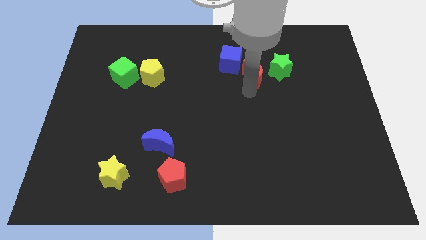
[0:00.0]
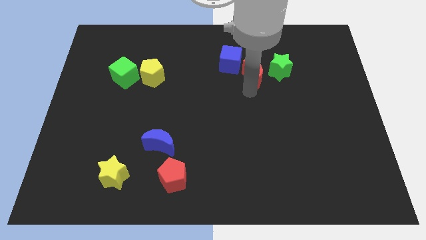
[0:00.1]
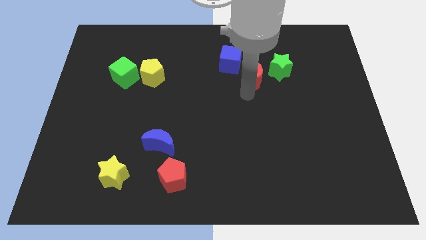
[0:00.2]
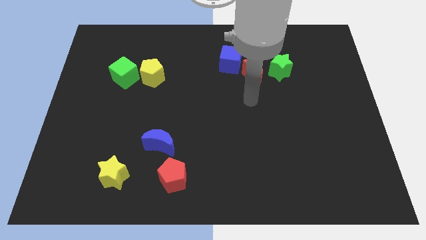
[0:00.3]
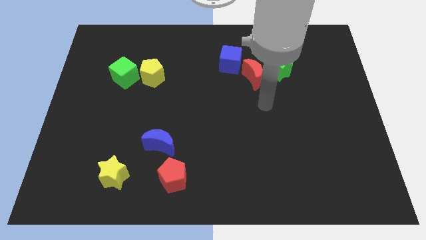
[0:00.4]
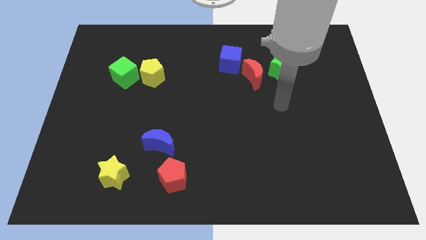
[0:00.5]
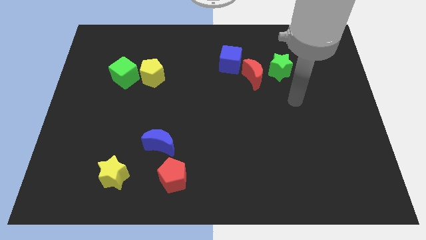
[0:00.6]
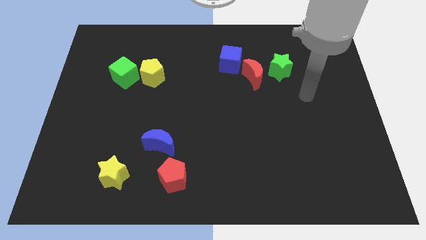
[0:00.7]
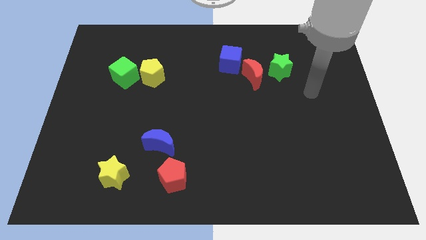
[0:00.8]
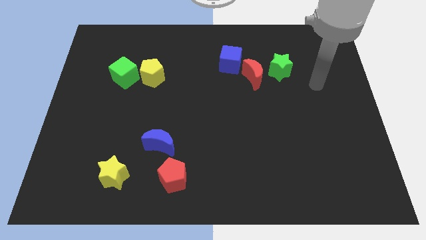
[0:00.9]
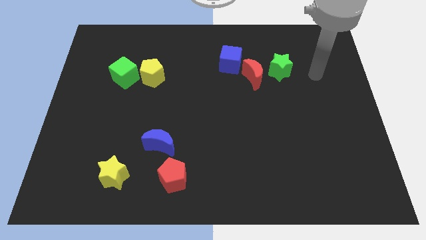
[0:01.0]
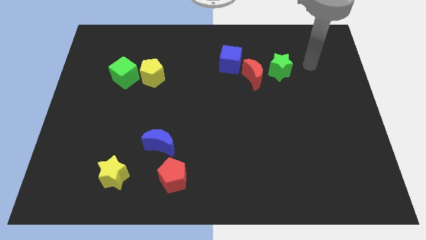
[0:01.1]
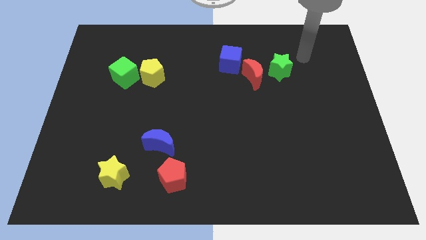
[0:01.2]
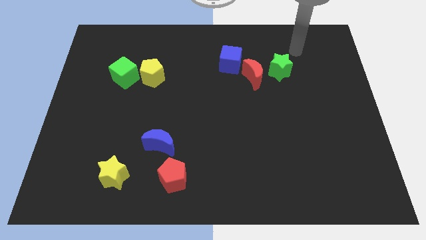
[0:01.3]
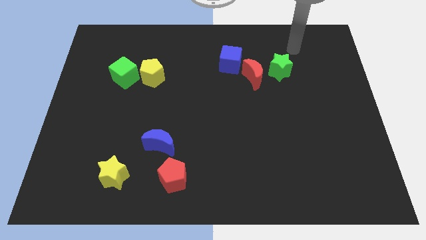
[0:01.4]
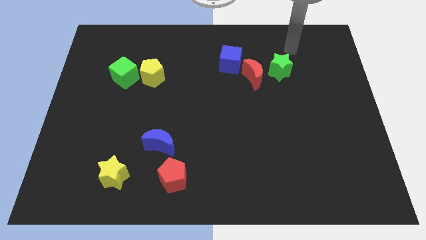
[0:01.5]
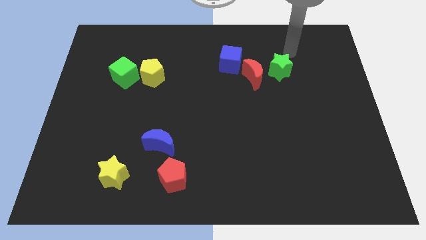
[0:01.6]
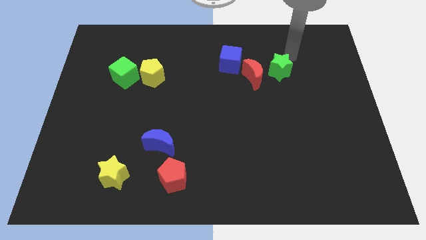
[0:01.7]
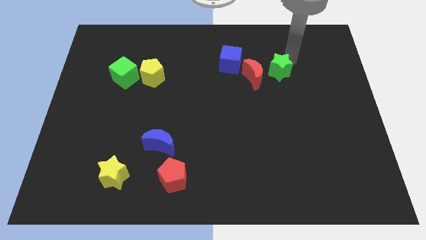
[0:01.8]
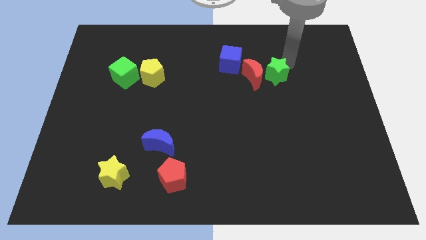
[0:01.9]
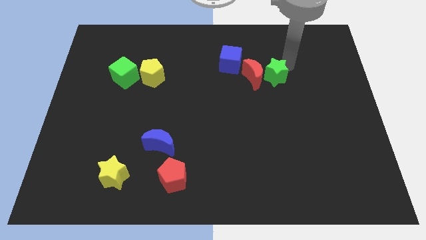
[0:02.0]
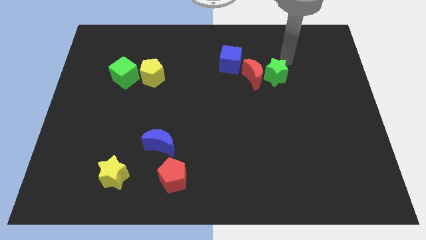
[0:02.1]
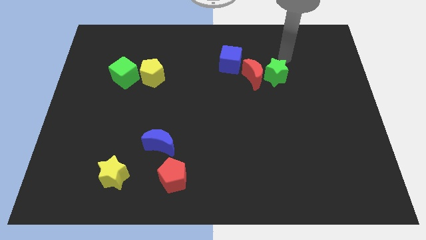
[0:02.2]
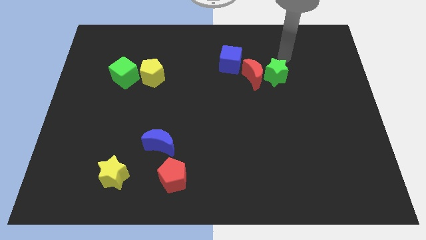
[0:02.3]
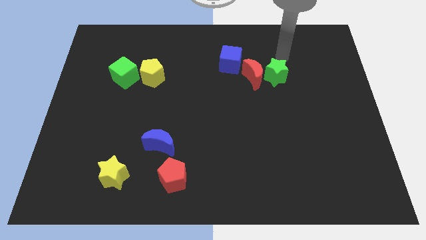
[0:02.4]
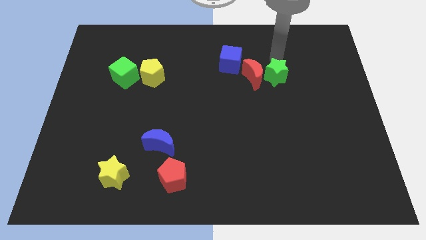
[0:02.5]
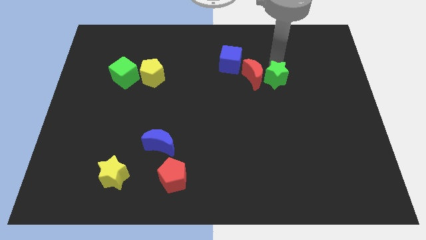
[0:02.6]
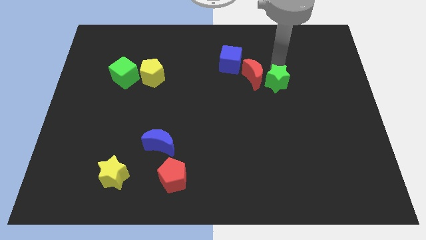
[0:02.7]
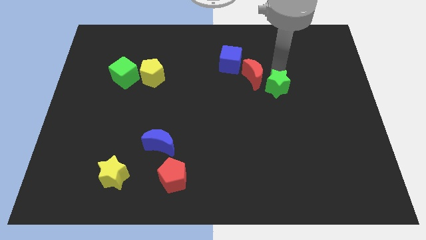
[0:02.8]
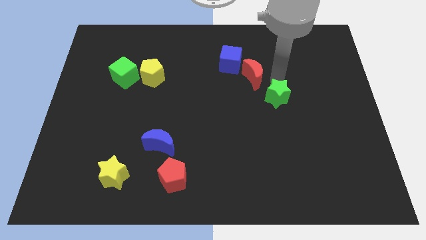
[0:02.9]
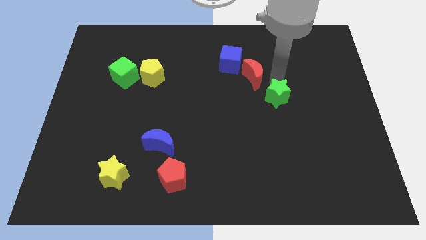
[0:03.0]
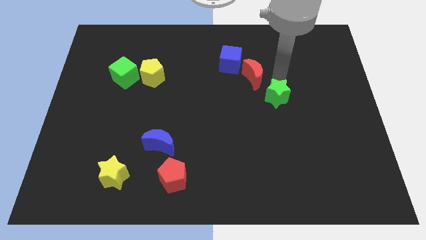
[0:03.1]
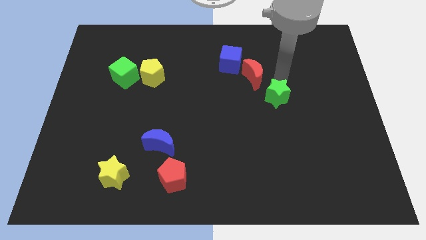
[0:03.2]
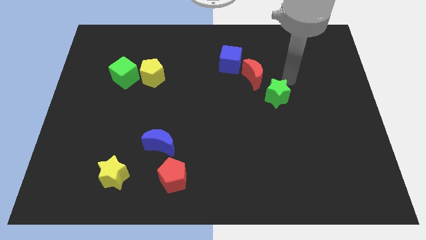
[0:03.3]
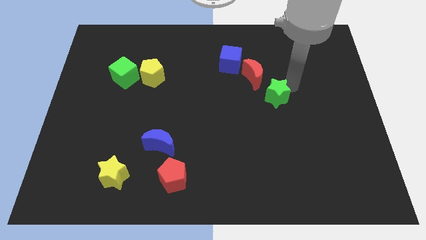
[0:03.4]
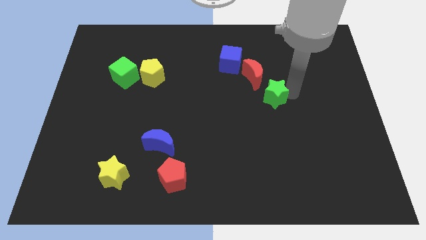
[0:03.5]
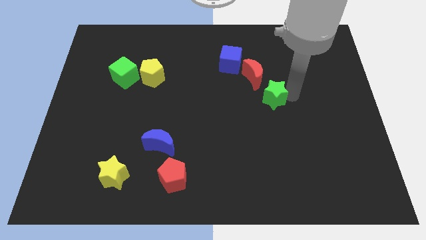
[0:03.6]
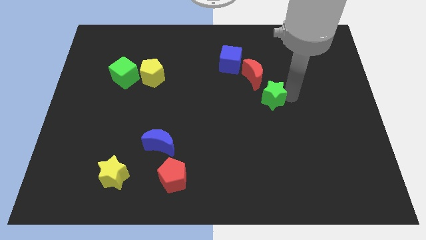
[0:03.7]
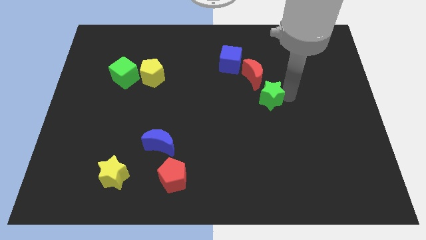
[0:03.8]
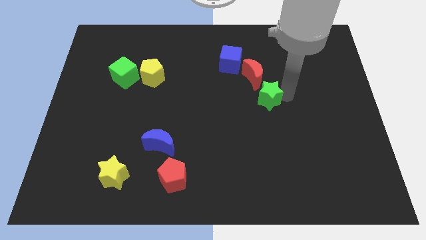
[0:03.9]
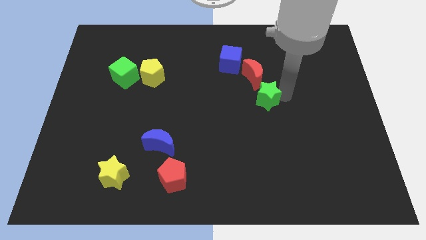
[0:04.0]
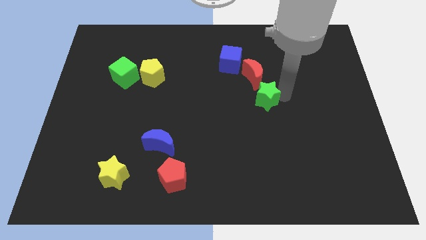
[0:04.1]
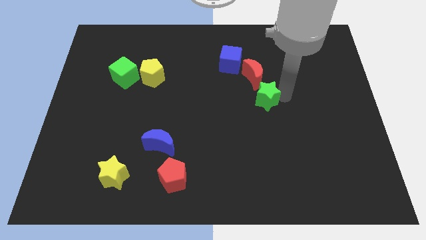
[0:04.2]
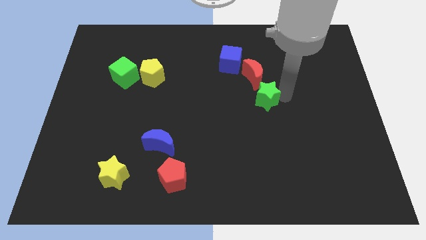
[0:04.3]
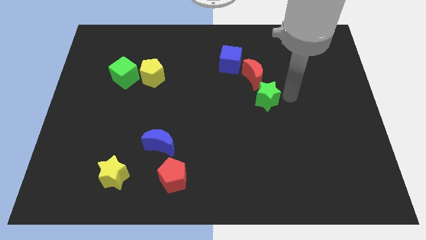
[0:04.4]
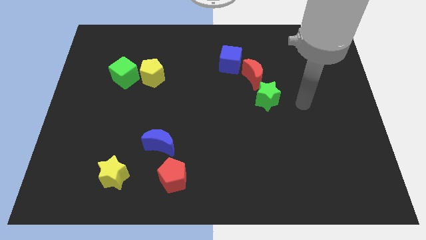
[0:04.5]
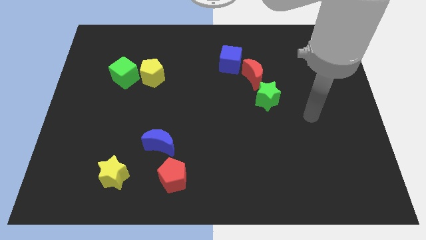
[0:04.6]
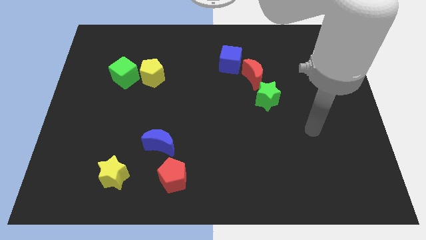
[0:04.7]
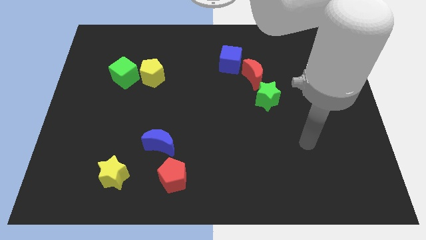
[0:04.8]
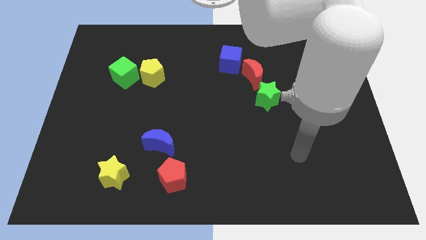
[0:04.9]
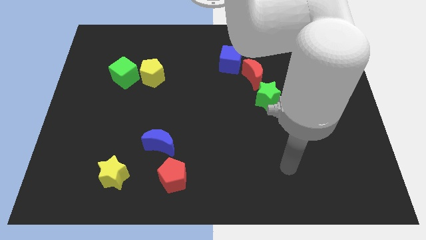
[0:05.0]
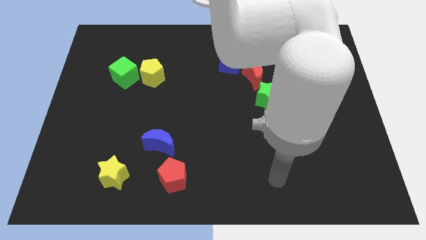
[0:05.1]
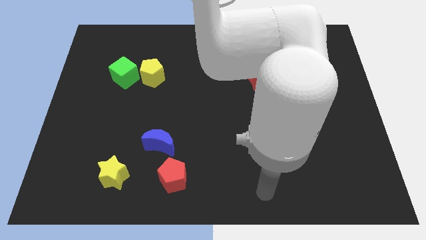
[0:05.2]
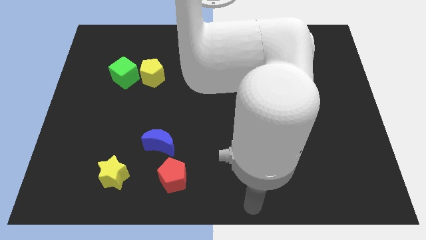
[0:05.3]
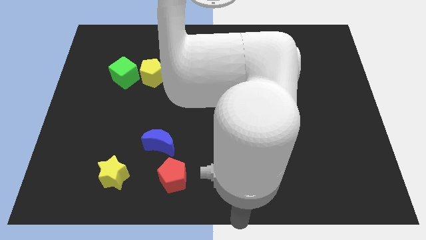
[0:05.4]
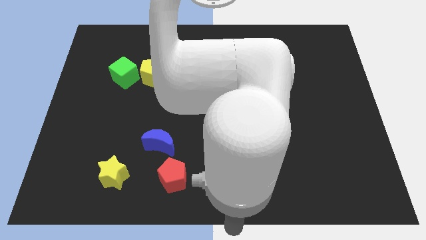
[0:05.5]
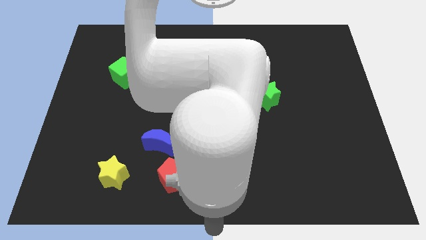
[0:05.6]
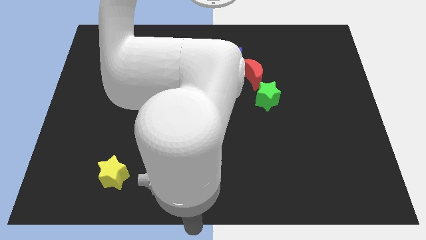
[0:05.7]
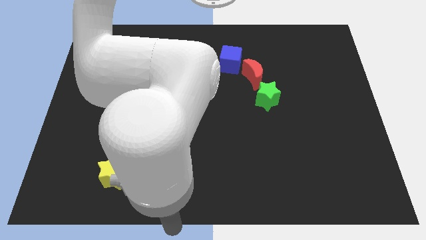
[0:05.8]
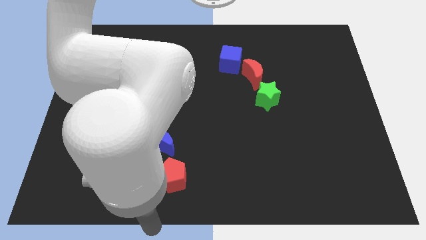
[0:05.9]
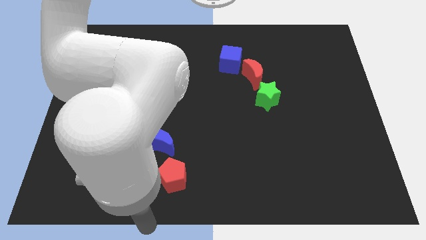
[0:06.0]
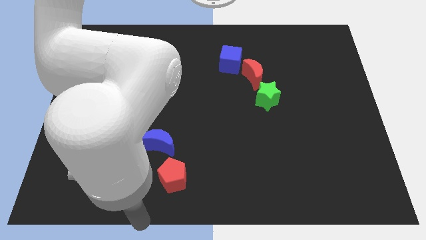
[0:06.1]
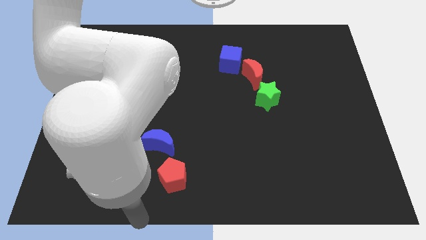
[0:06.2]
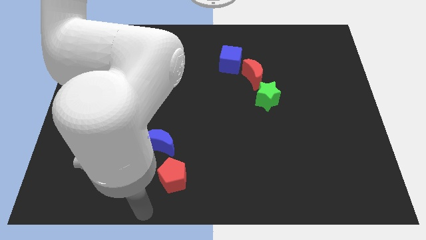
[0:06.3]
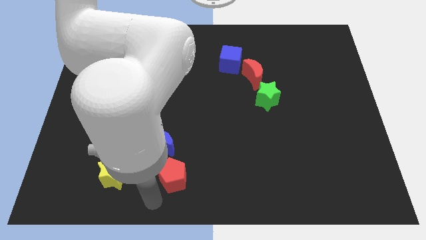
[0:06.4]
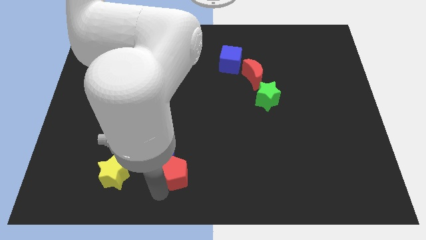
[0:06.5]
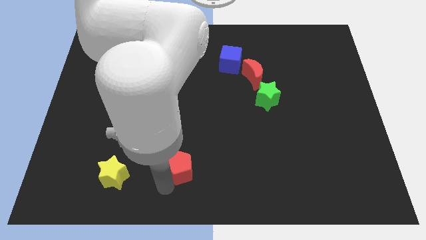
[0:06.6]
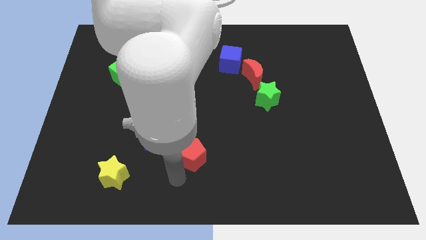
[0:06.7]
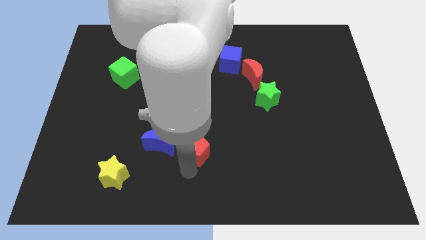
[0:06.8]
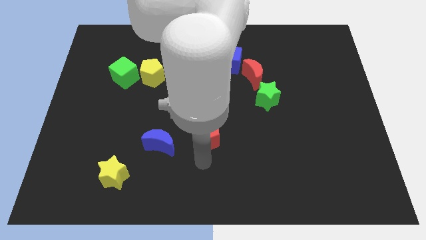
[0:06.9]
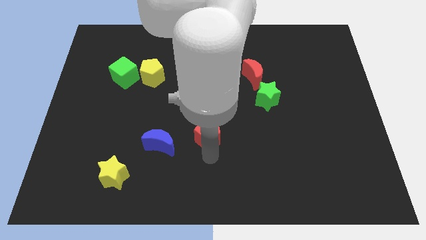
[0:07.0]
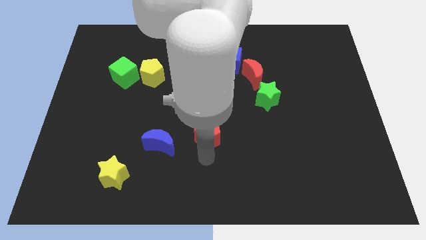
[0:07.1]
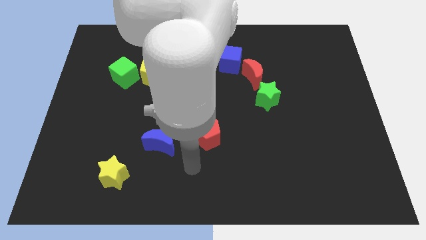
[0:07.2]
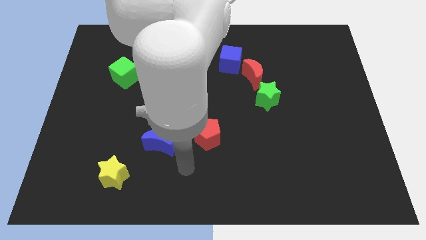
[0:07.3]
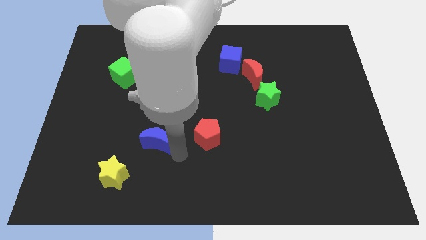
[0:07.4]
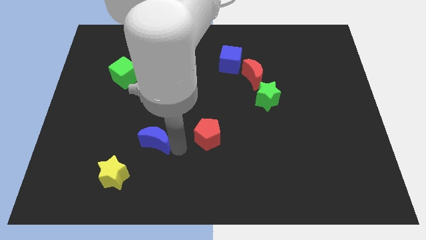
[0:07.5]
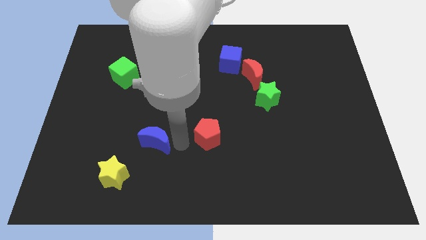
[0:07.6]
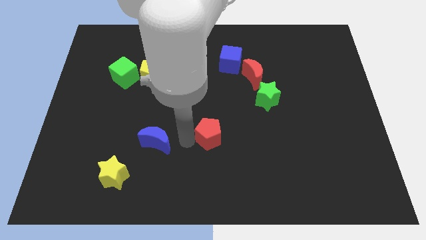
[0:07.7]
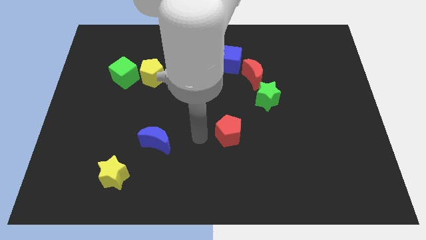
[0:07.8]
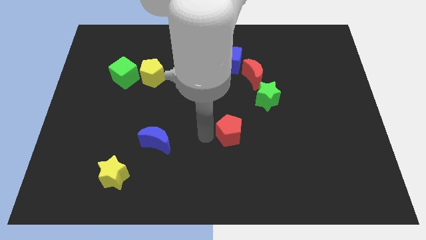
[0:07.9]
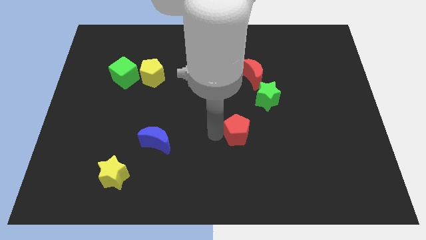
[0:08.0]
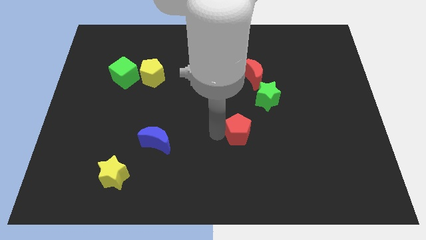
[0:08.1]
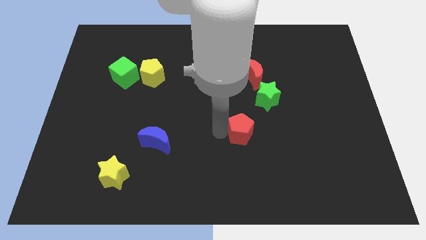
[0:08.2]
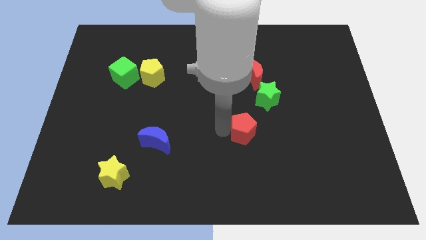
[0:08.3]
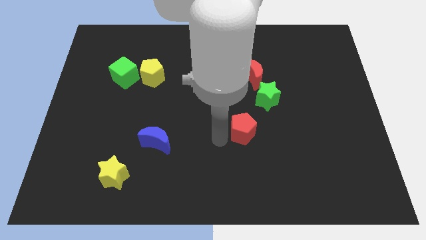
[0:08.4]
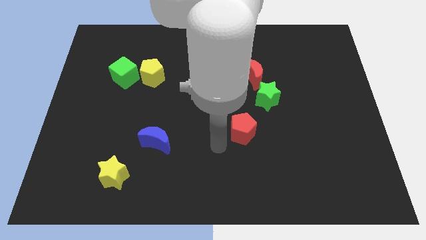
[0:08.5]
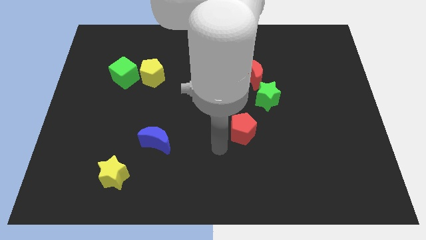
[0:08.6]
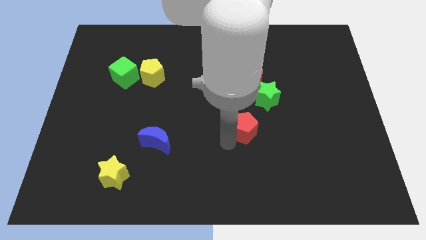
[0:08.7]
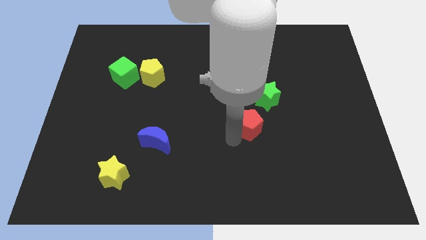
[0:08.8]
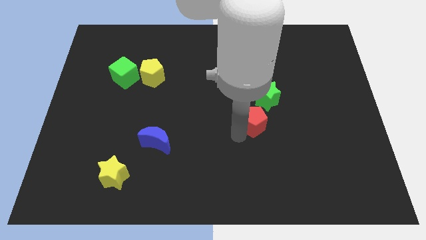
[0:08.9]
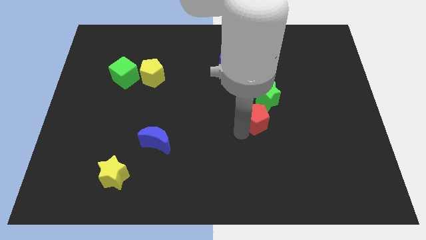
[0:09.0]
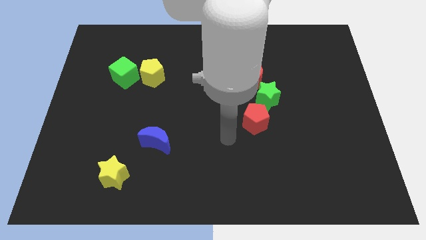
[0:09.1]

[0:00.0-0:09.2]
push the green star to the bottom of the red moon
